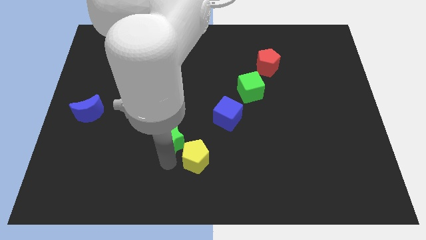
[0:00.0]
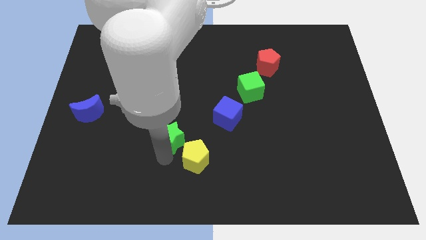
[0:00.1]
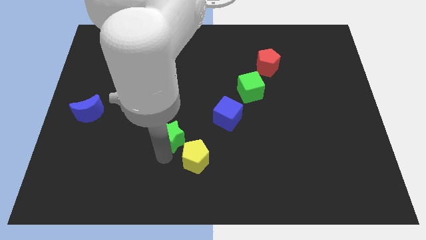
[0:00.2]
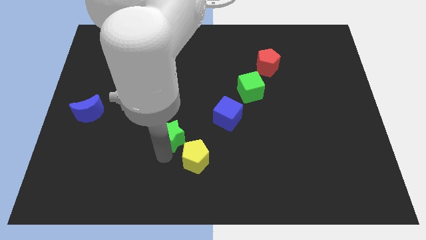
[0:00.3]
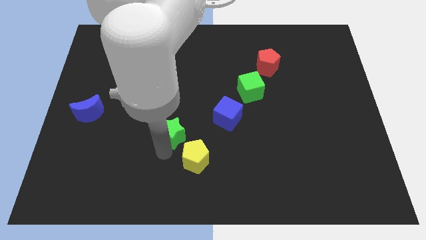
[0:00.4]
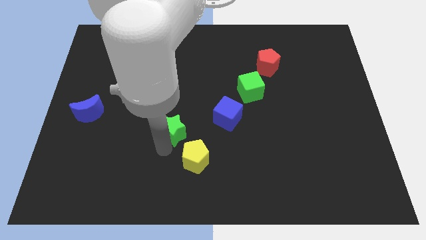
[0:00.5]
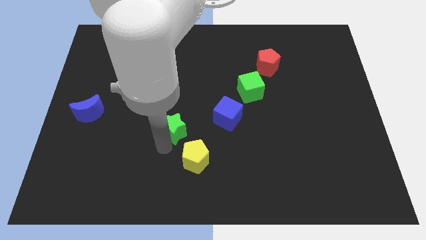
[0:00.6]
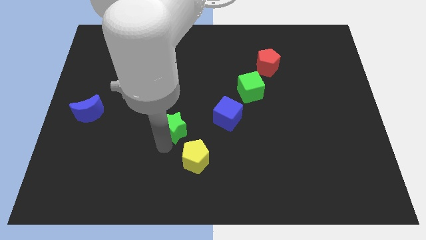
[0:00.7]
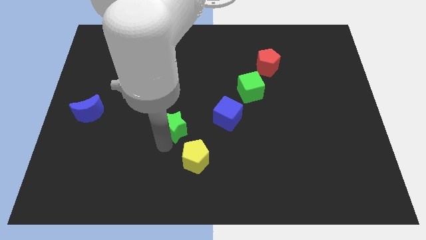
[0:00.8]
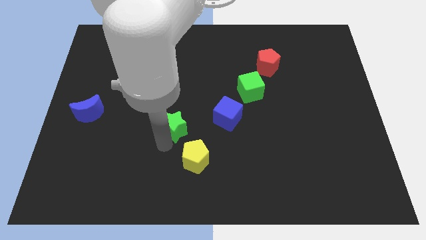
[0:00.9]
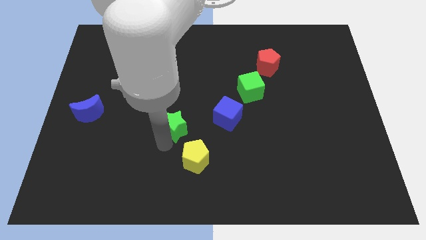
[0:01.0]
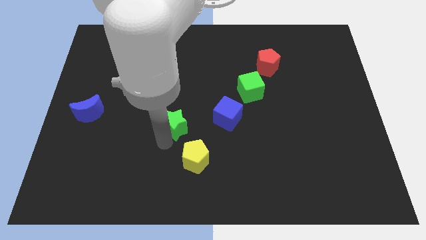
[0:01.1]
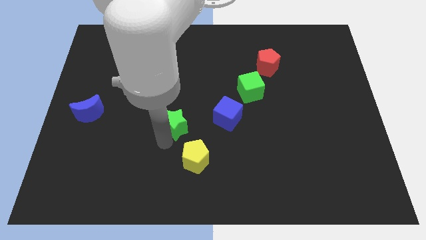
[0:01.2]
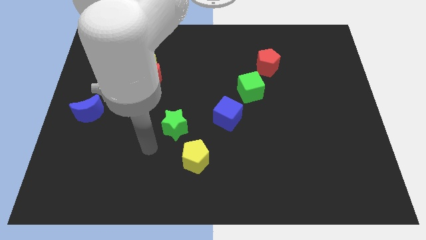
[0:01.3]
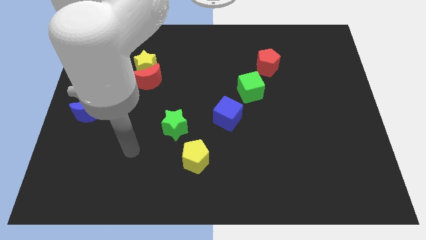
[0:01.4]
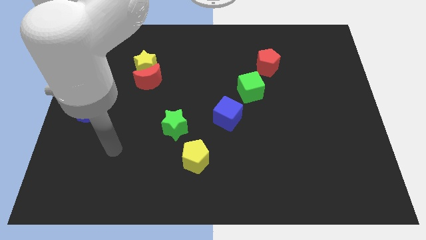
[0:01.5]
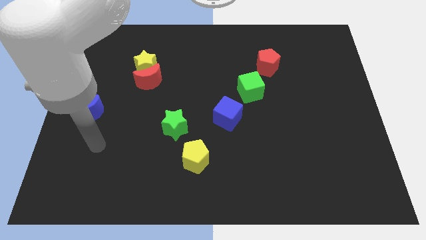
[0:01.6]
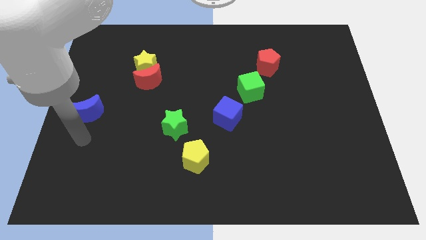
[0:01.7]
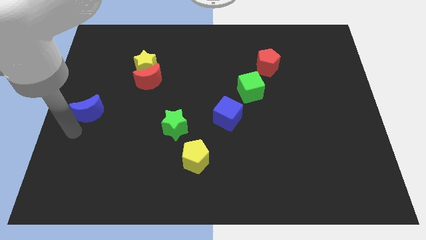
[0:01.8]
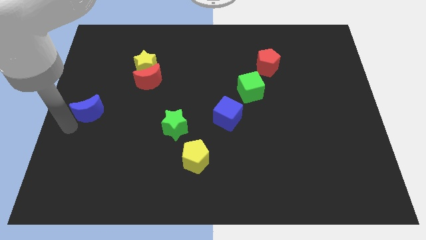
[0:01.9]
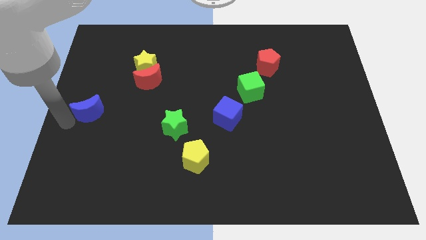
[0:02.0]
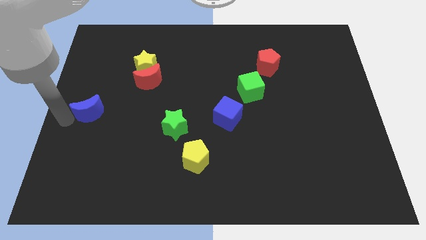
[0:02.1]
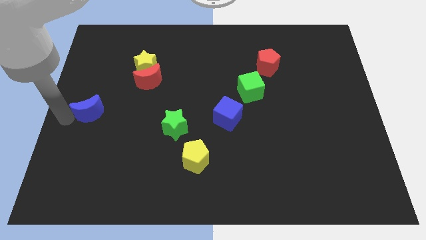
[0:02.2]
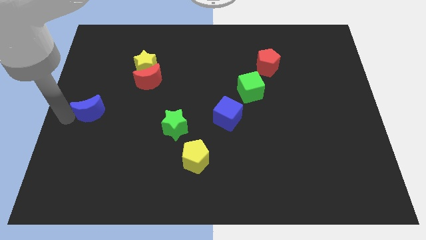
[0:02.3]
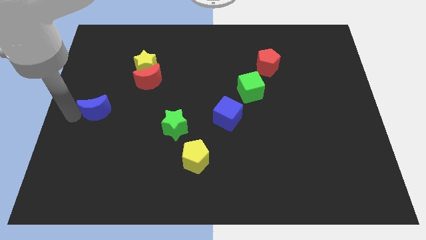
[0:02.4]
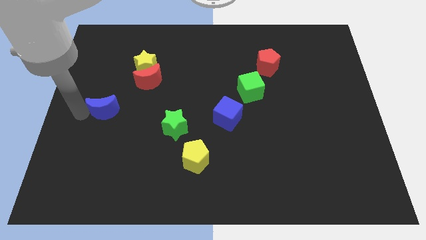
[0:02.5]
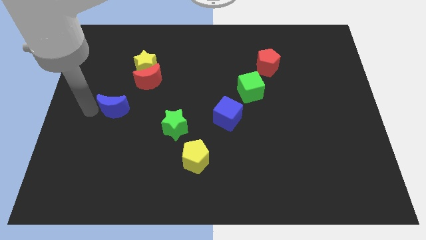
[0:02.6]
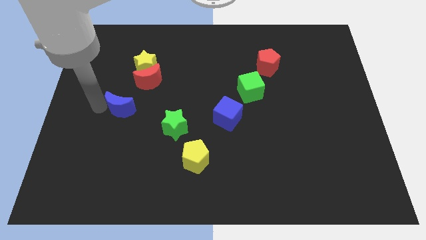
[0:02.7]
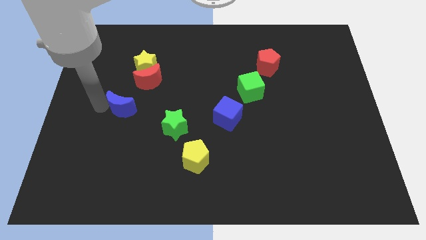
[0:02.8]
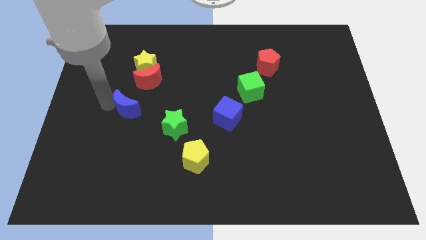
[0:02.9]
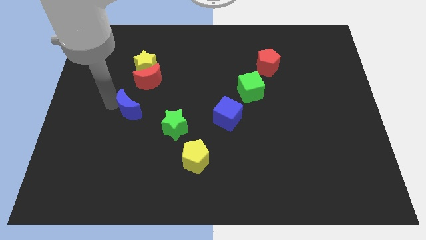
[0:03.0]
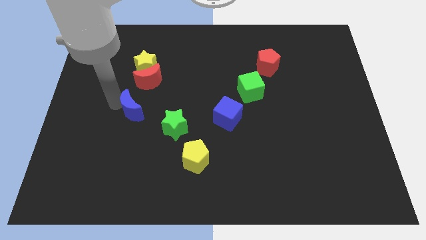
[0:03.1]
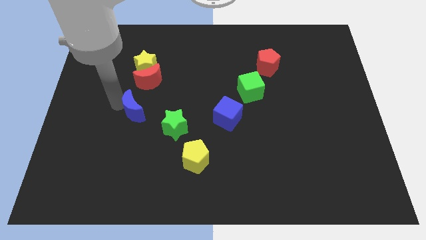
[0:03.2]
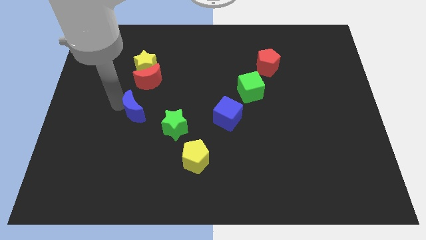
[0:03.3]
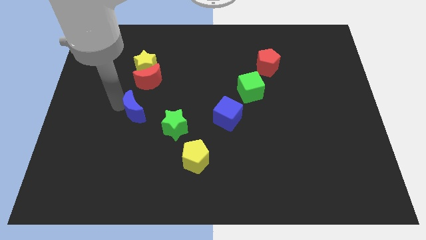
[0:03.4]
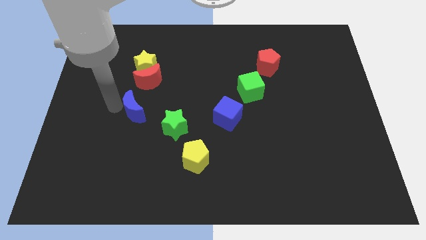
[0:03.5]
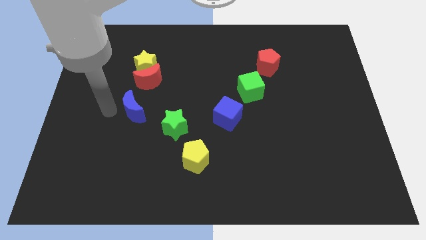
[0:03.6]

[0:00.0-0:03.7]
move the green star towards the top left side of the yellow pentagon

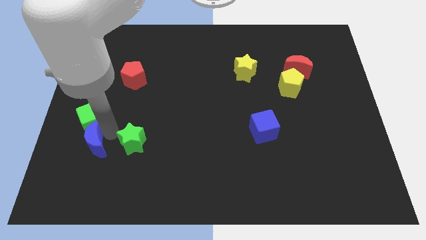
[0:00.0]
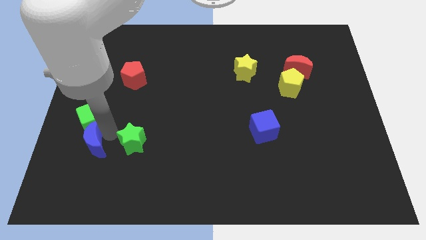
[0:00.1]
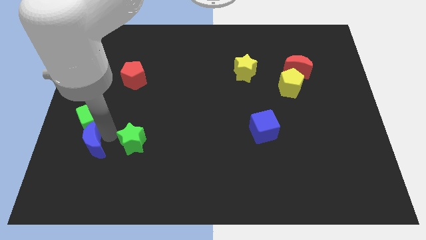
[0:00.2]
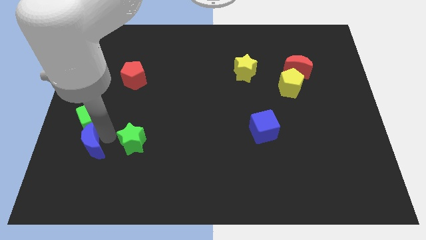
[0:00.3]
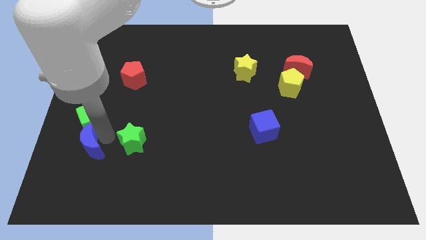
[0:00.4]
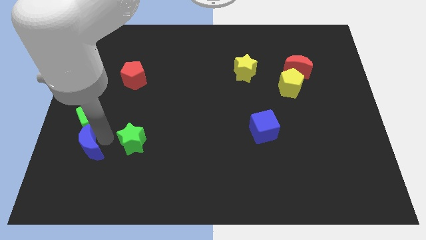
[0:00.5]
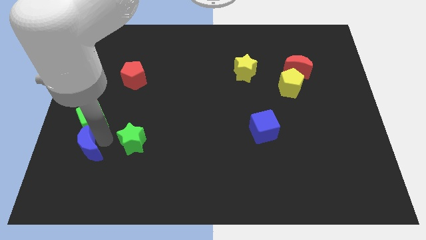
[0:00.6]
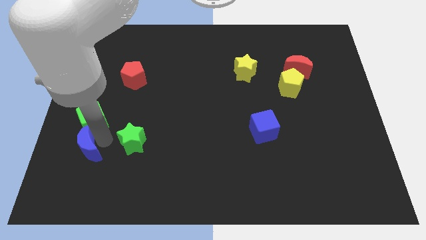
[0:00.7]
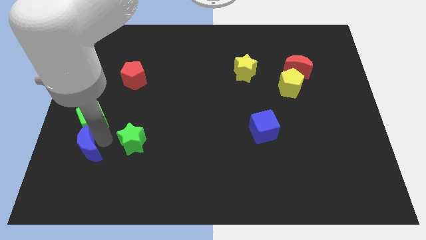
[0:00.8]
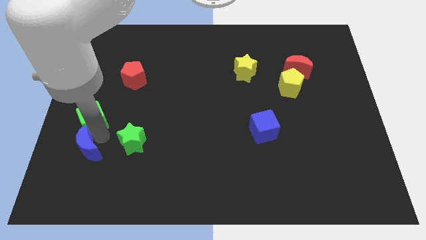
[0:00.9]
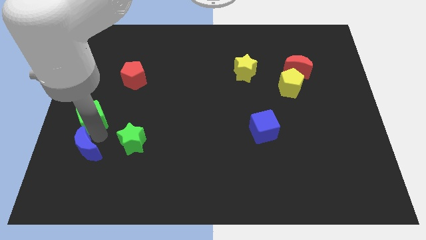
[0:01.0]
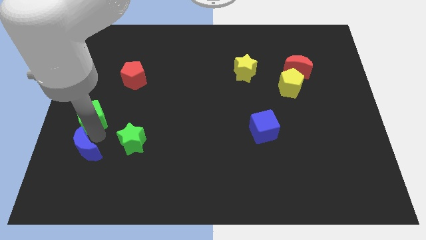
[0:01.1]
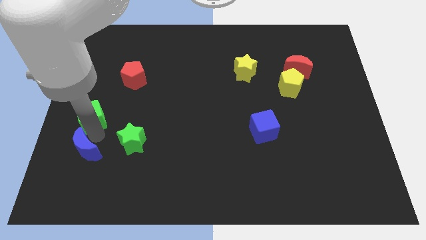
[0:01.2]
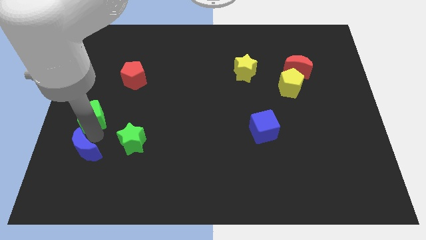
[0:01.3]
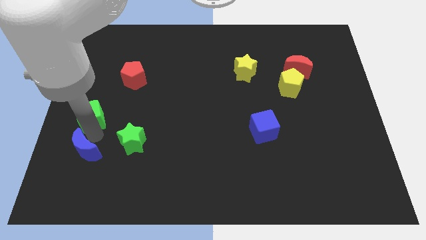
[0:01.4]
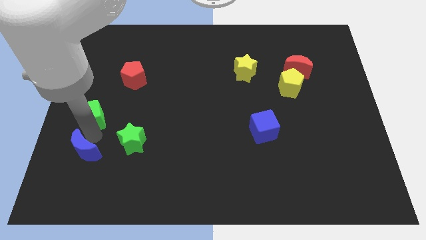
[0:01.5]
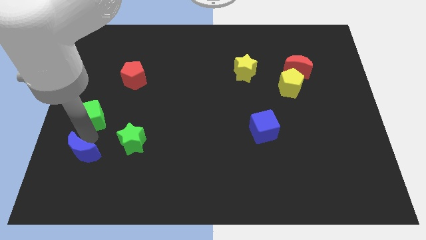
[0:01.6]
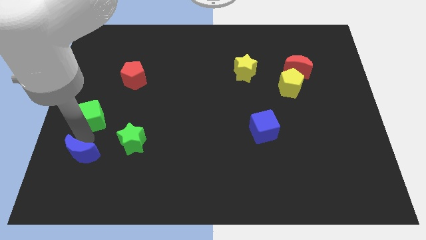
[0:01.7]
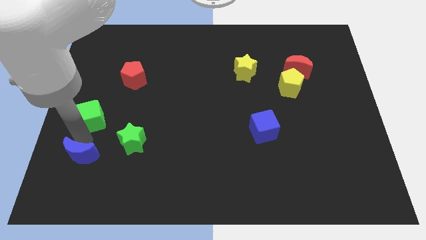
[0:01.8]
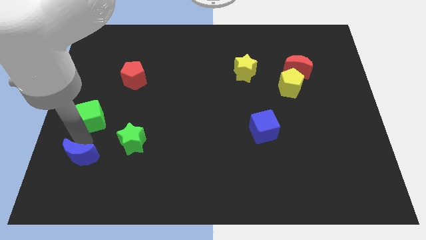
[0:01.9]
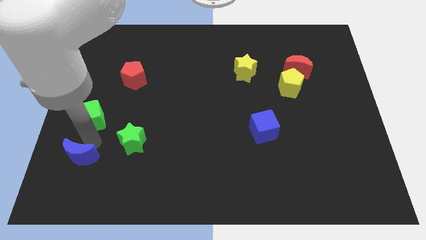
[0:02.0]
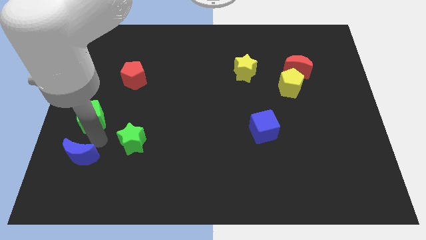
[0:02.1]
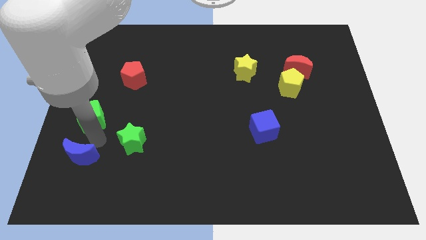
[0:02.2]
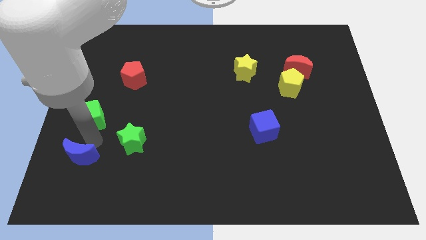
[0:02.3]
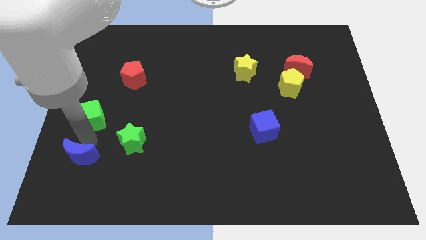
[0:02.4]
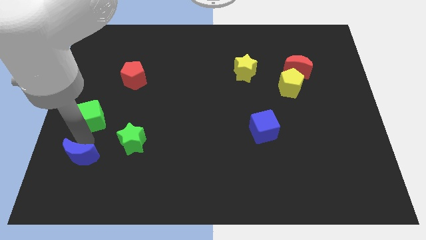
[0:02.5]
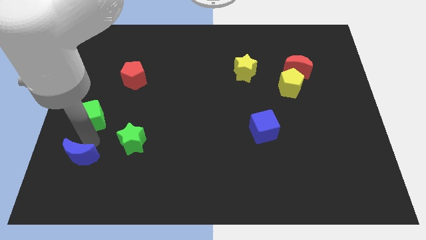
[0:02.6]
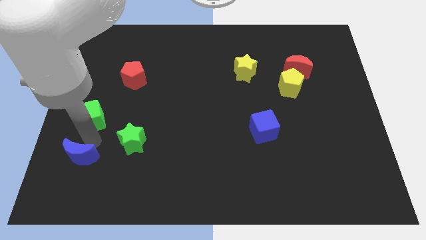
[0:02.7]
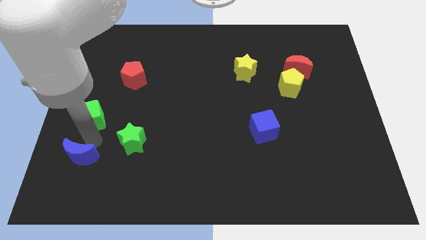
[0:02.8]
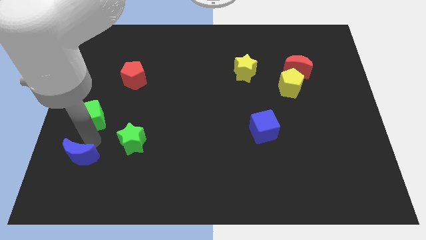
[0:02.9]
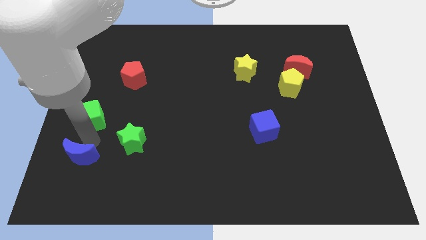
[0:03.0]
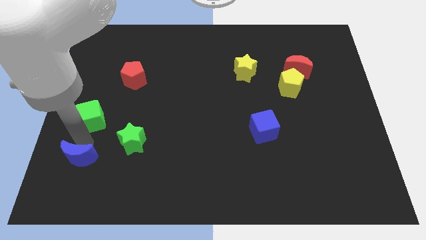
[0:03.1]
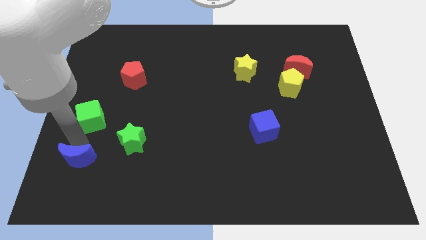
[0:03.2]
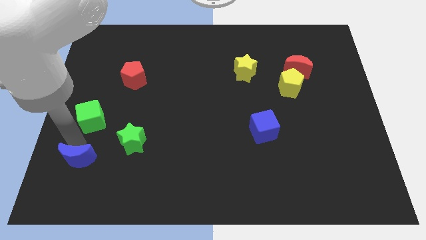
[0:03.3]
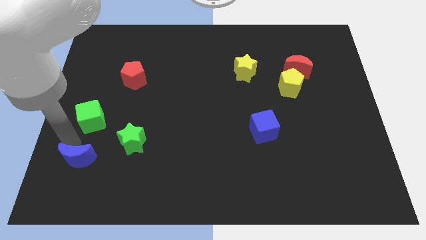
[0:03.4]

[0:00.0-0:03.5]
separate the blue crescent from green star

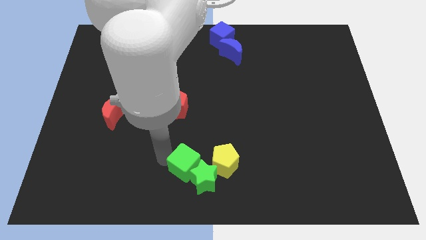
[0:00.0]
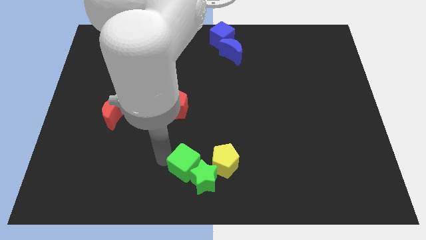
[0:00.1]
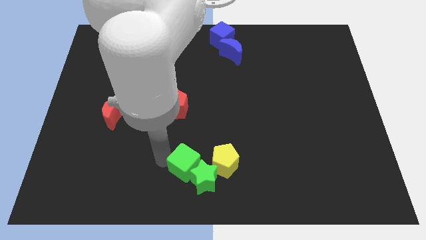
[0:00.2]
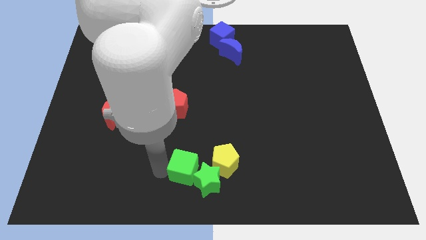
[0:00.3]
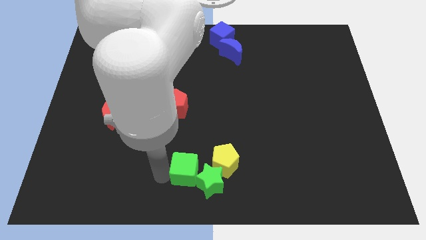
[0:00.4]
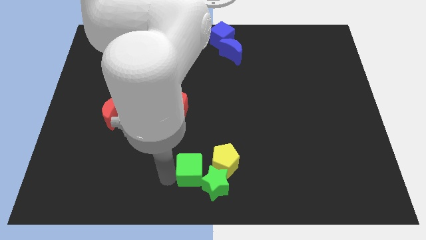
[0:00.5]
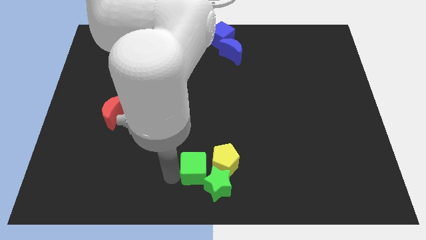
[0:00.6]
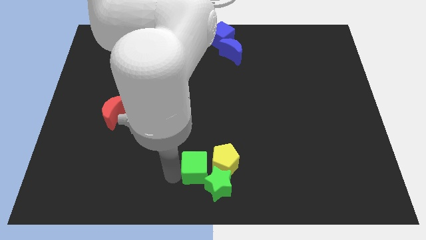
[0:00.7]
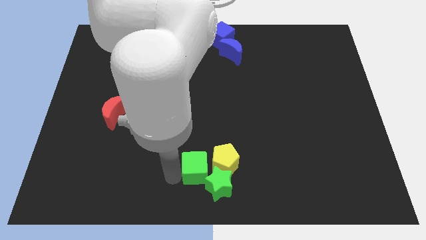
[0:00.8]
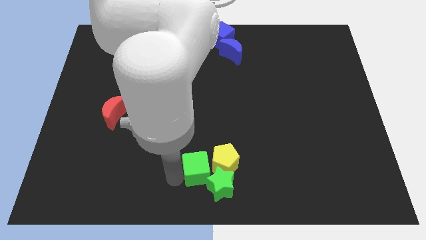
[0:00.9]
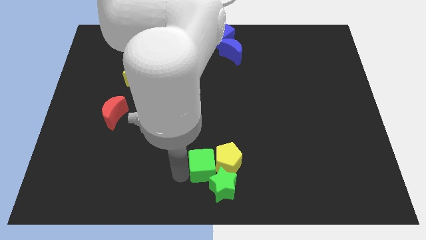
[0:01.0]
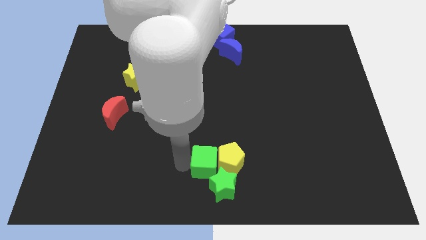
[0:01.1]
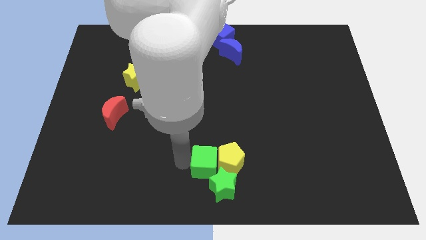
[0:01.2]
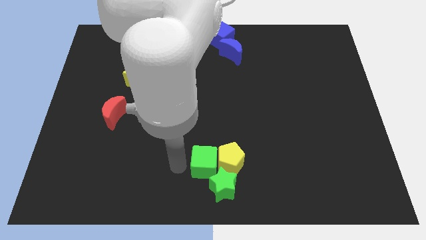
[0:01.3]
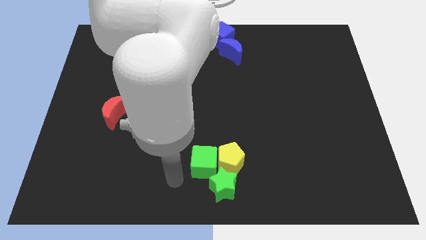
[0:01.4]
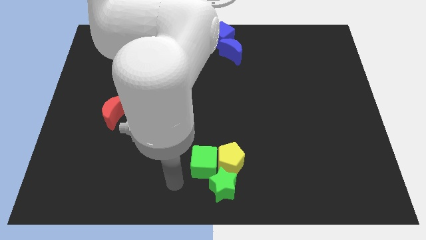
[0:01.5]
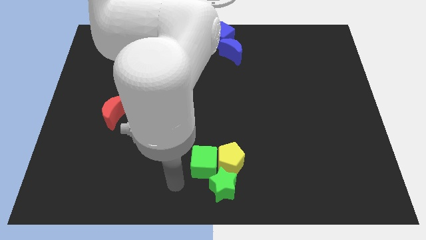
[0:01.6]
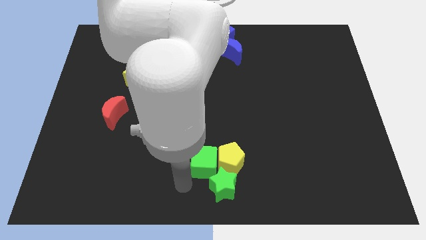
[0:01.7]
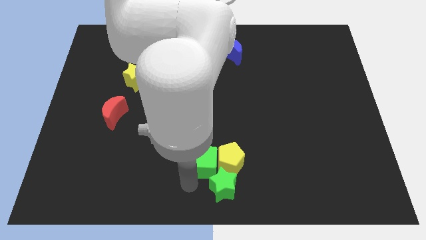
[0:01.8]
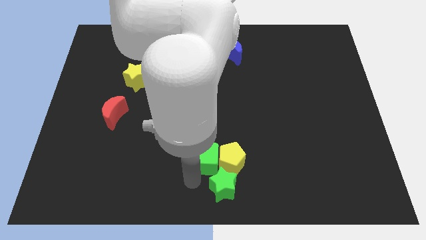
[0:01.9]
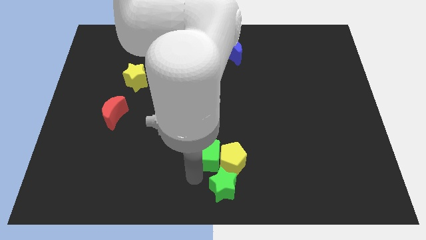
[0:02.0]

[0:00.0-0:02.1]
push the green star with the green cube
